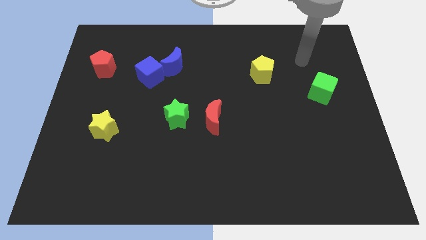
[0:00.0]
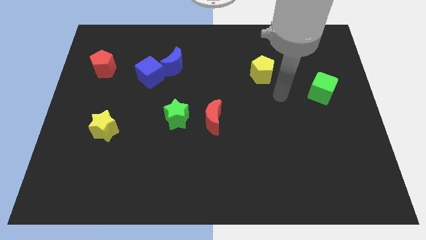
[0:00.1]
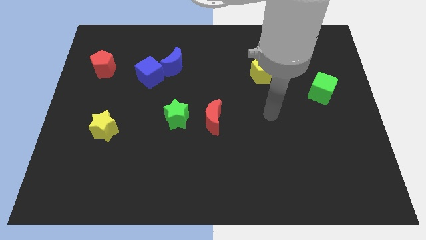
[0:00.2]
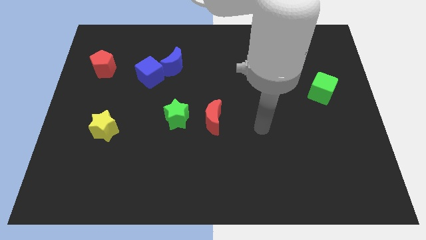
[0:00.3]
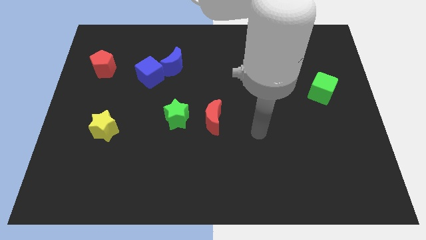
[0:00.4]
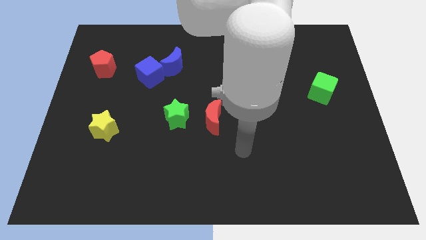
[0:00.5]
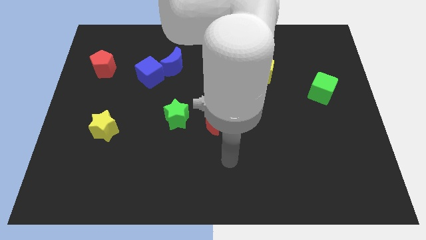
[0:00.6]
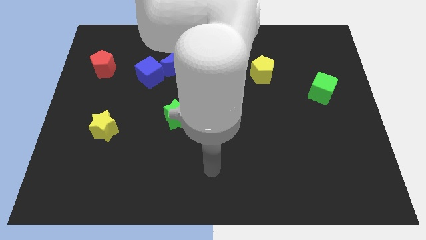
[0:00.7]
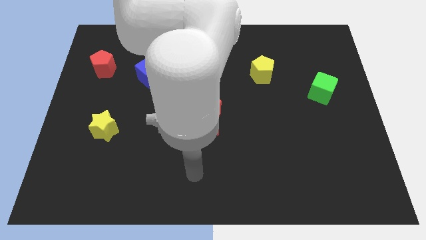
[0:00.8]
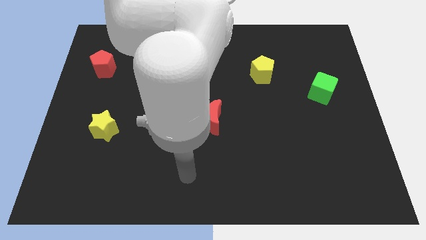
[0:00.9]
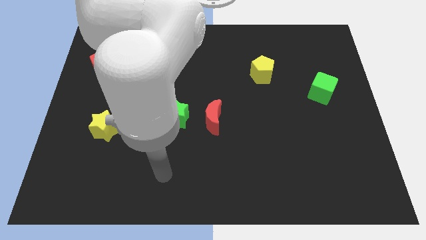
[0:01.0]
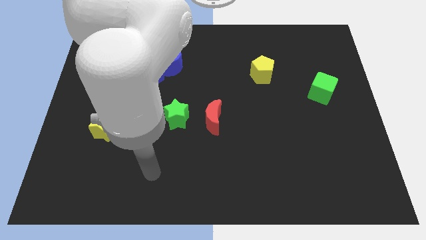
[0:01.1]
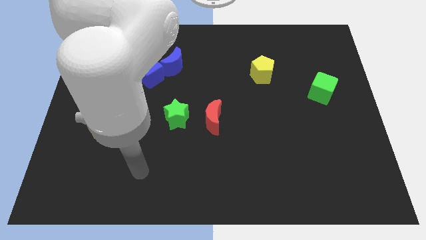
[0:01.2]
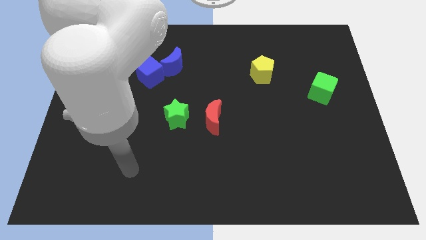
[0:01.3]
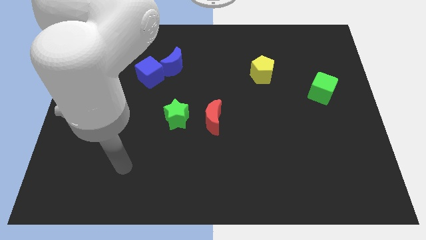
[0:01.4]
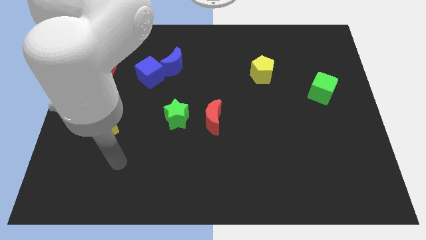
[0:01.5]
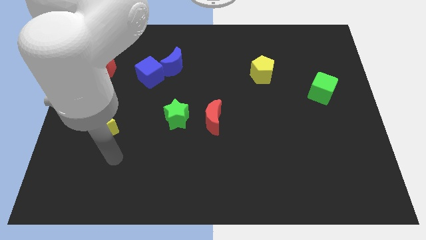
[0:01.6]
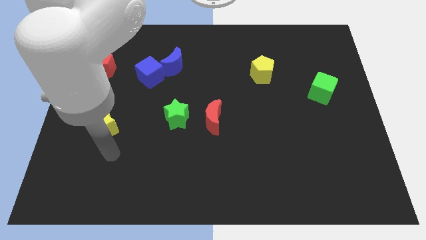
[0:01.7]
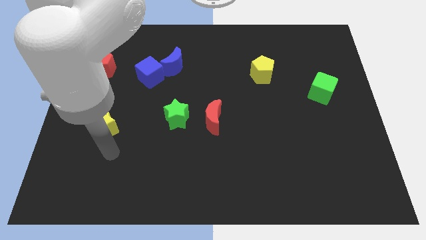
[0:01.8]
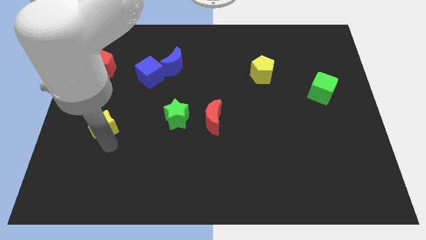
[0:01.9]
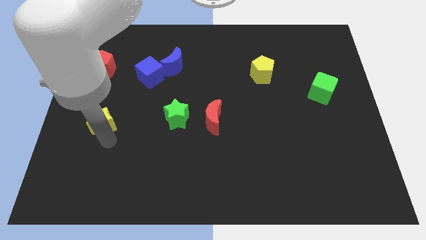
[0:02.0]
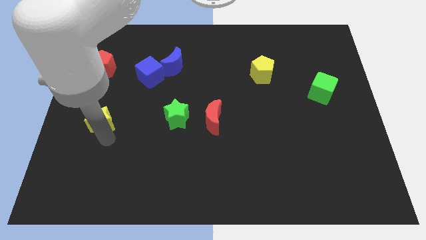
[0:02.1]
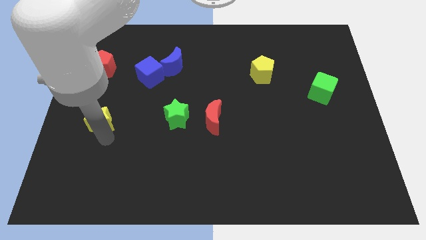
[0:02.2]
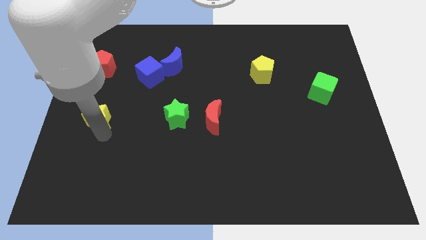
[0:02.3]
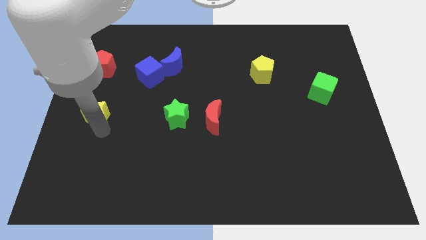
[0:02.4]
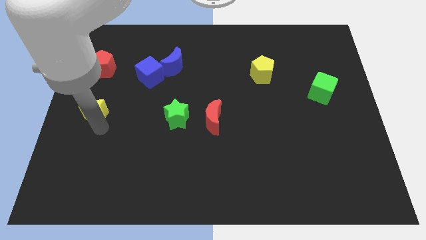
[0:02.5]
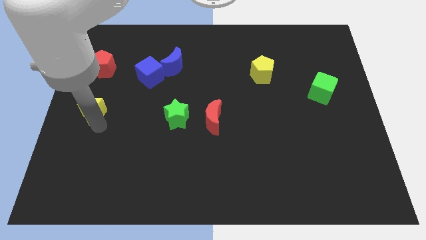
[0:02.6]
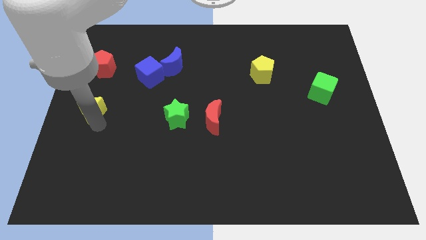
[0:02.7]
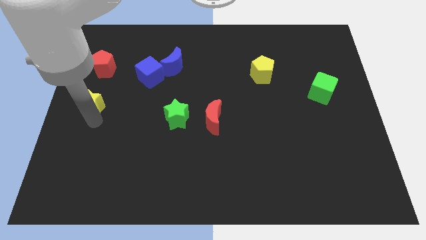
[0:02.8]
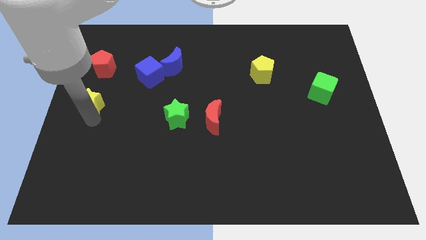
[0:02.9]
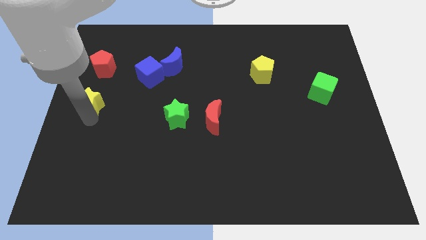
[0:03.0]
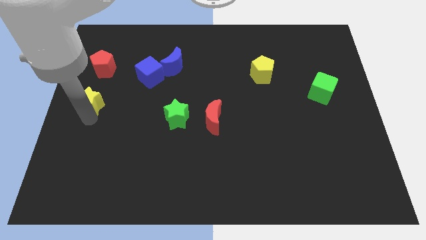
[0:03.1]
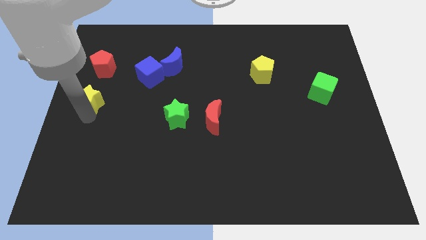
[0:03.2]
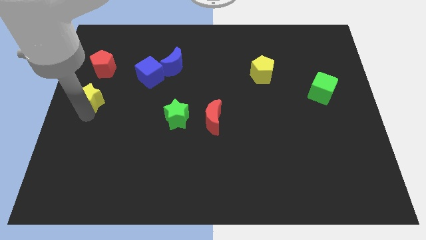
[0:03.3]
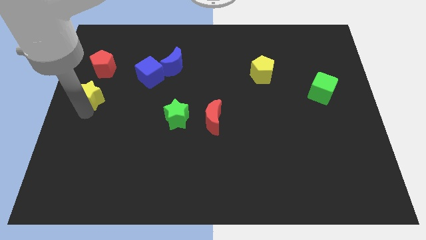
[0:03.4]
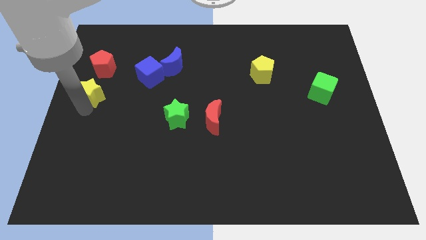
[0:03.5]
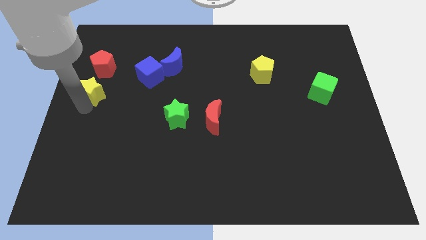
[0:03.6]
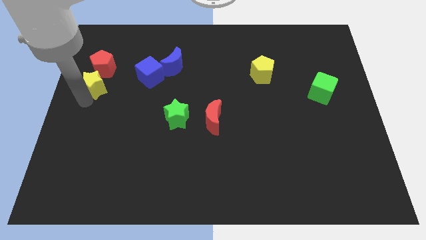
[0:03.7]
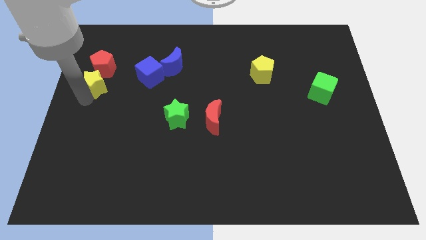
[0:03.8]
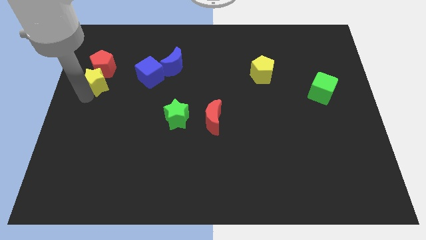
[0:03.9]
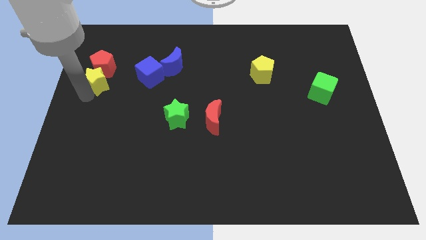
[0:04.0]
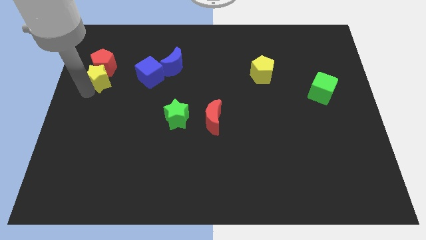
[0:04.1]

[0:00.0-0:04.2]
slide the yellow star next to the red pentagon

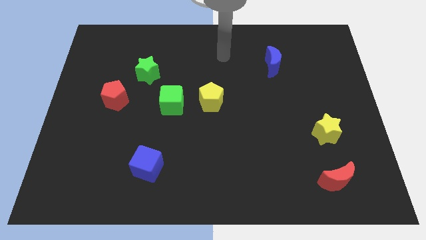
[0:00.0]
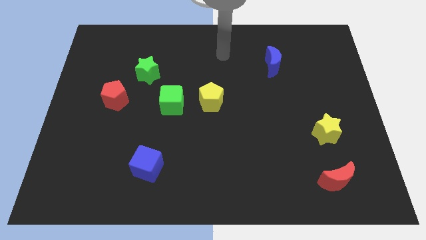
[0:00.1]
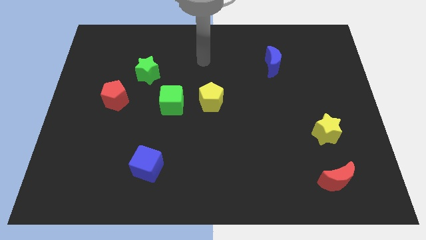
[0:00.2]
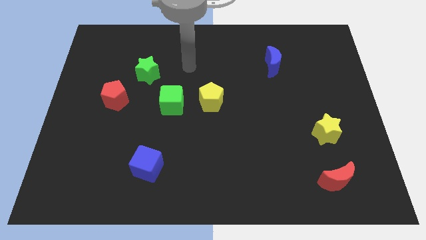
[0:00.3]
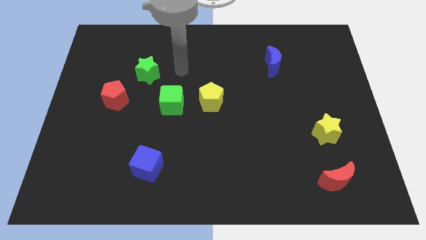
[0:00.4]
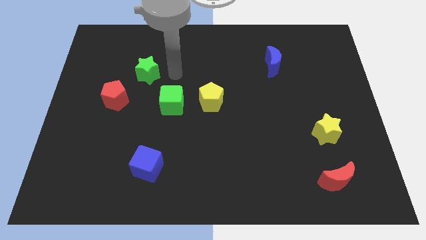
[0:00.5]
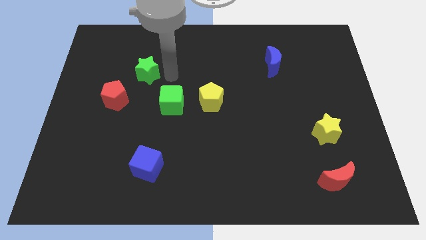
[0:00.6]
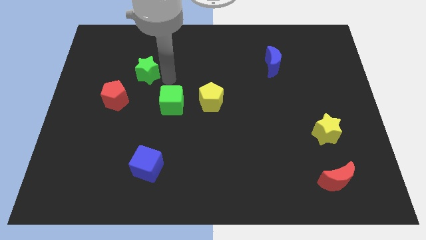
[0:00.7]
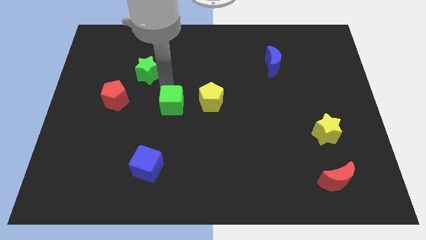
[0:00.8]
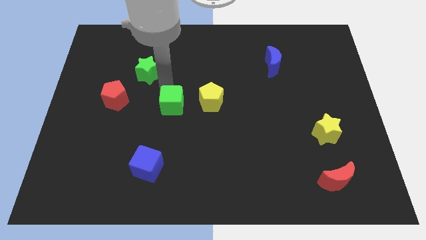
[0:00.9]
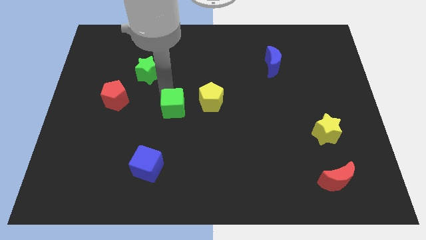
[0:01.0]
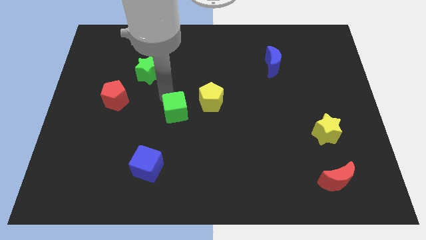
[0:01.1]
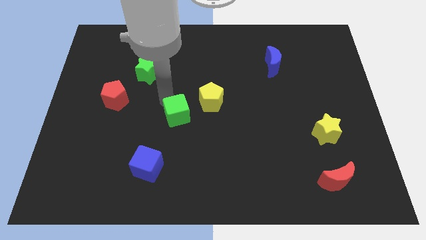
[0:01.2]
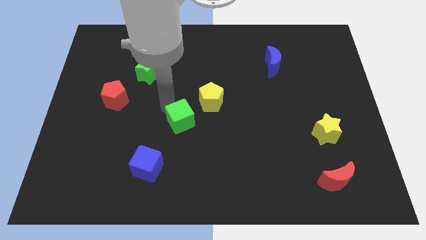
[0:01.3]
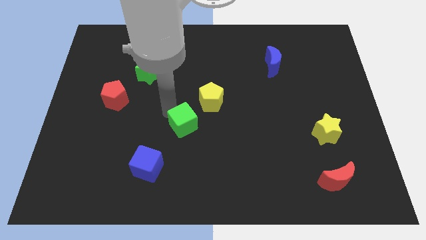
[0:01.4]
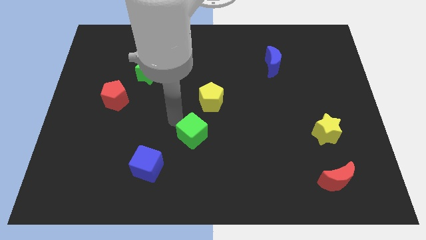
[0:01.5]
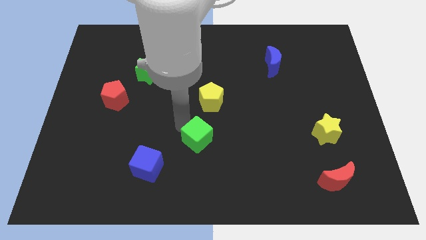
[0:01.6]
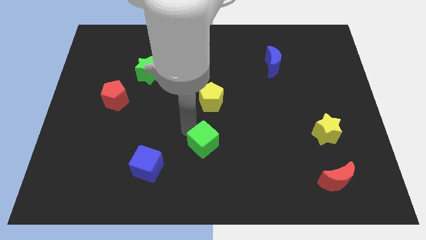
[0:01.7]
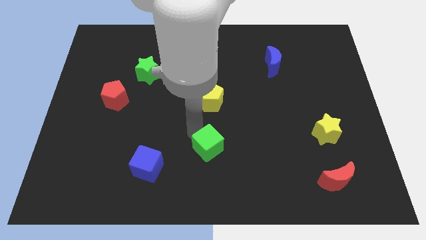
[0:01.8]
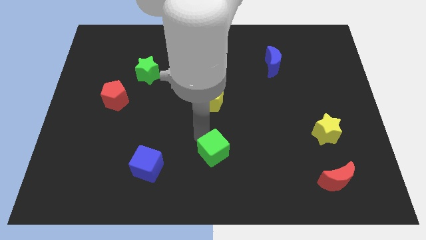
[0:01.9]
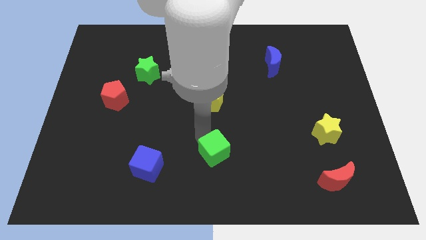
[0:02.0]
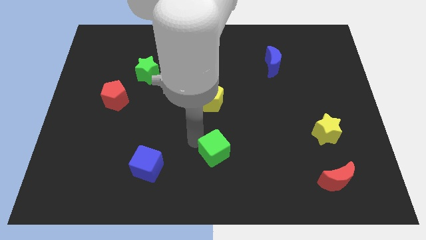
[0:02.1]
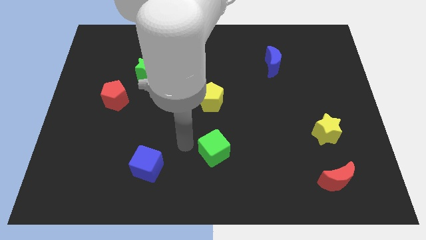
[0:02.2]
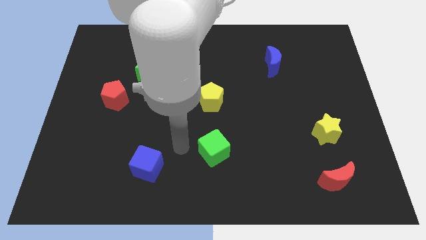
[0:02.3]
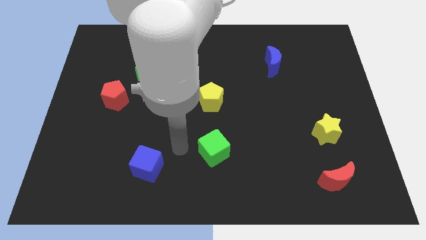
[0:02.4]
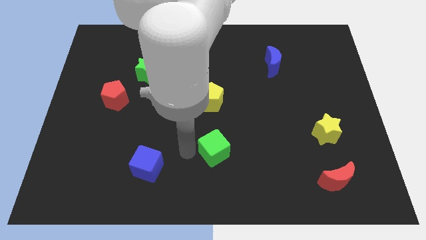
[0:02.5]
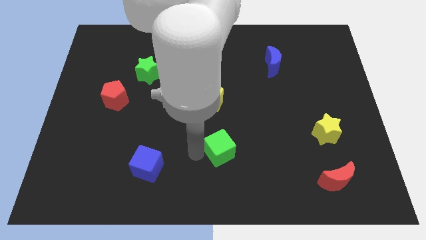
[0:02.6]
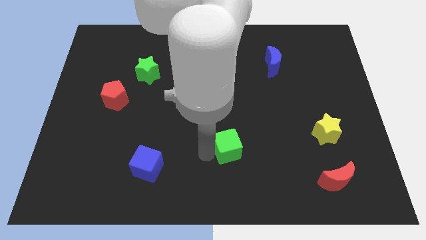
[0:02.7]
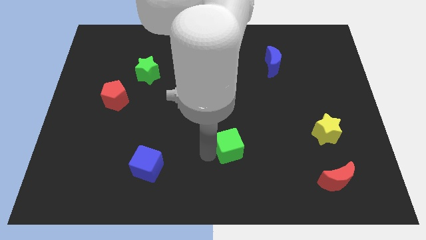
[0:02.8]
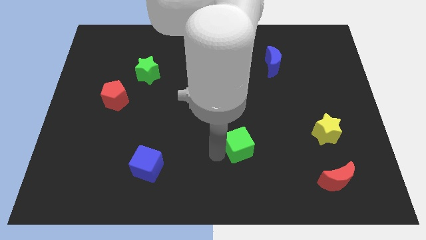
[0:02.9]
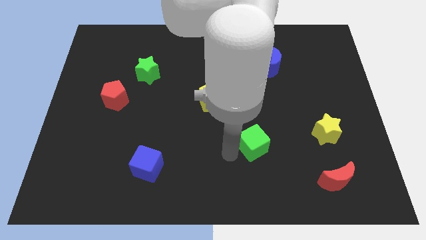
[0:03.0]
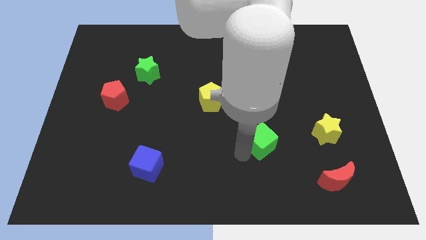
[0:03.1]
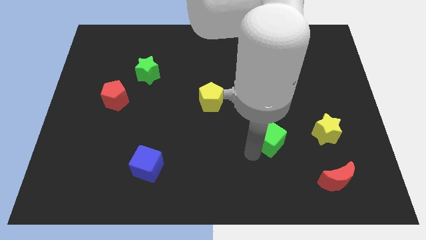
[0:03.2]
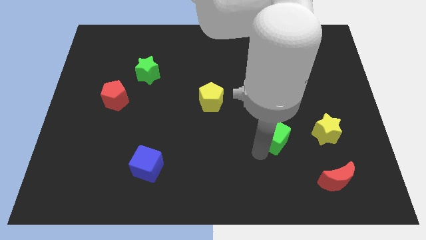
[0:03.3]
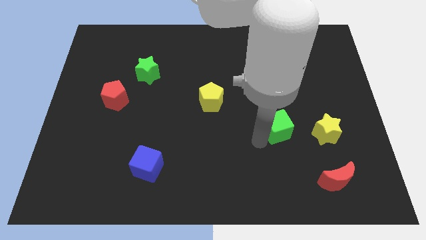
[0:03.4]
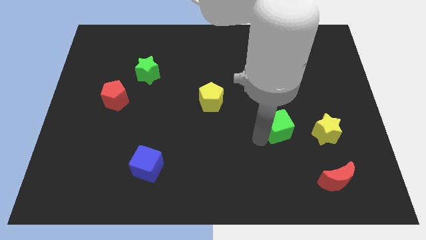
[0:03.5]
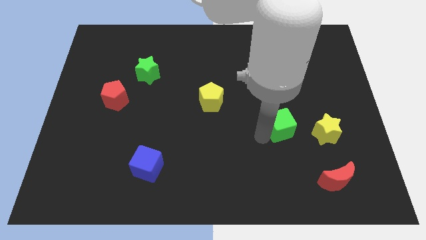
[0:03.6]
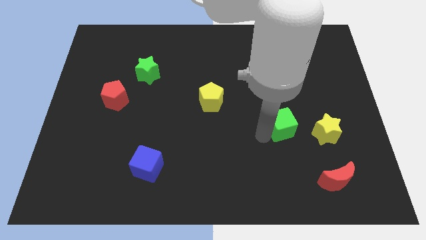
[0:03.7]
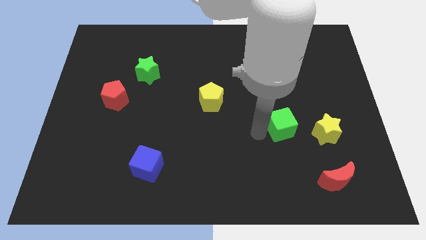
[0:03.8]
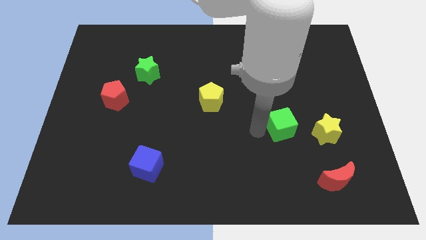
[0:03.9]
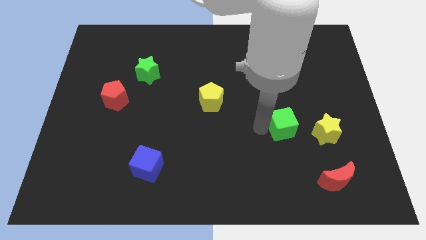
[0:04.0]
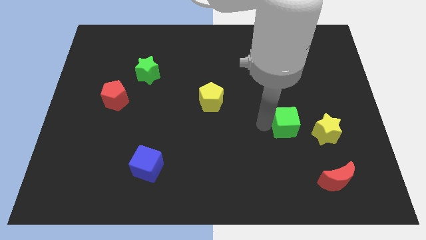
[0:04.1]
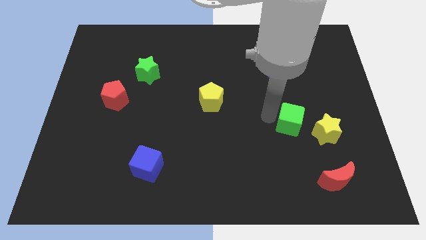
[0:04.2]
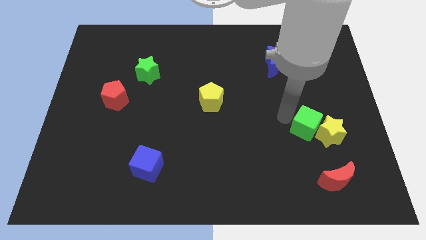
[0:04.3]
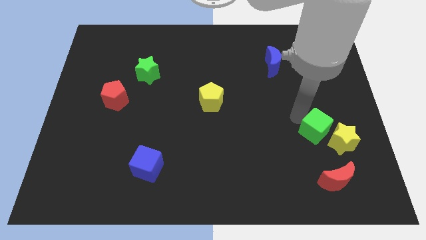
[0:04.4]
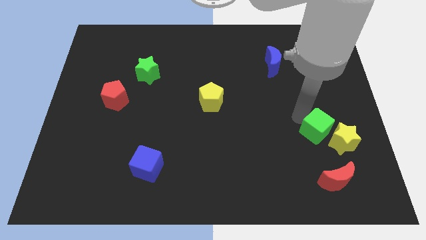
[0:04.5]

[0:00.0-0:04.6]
slide the green cube to the yellow star
